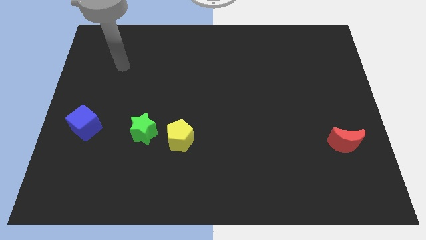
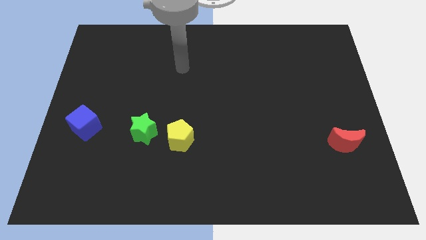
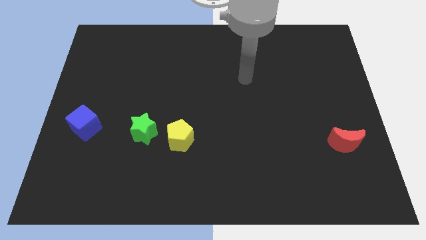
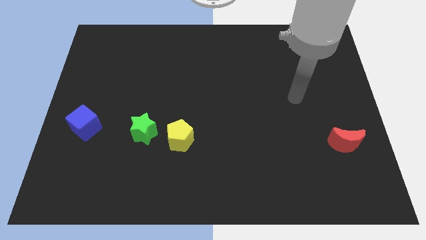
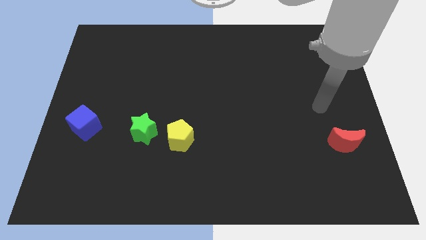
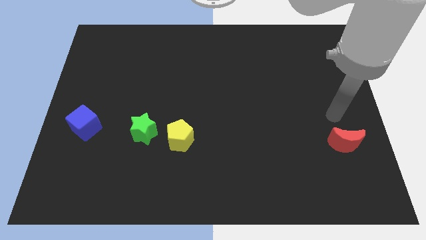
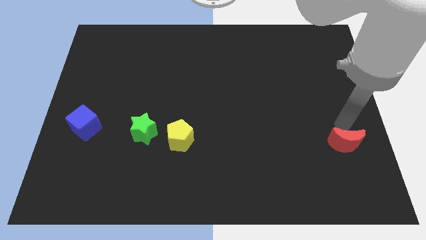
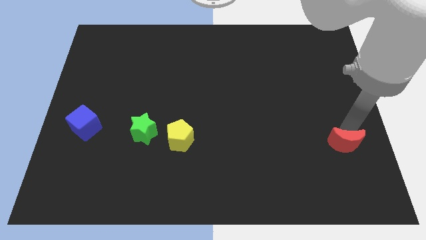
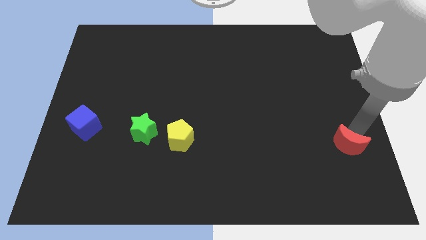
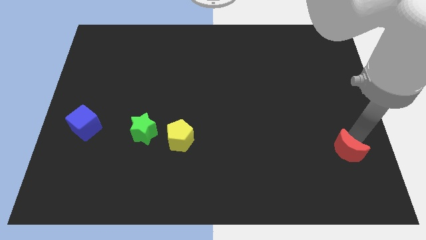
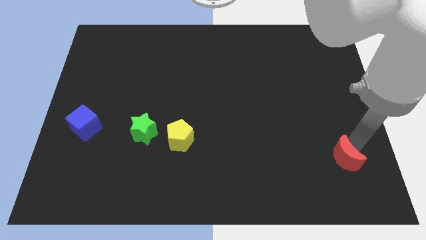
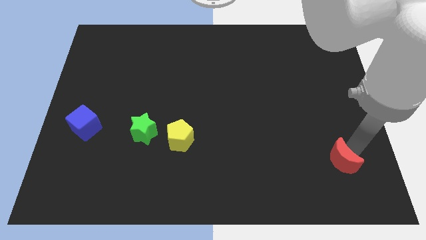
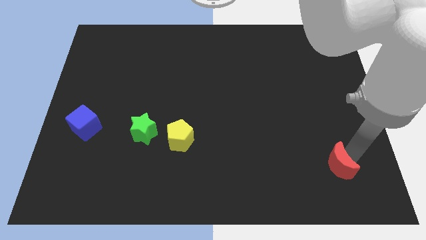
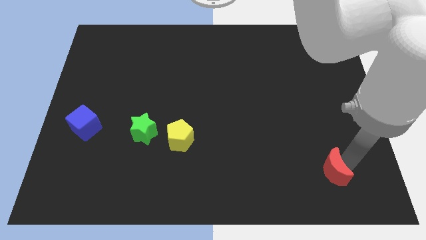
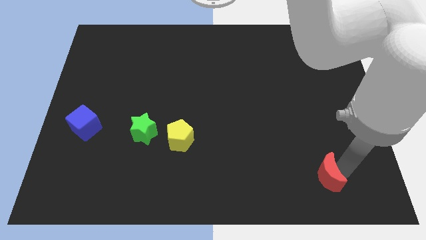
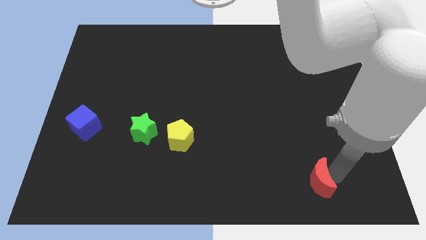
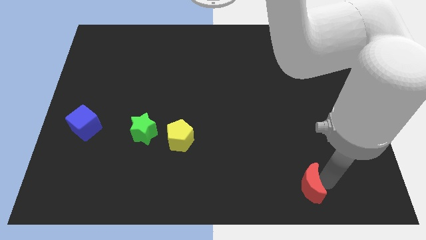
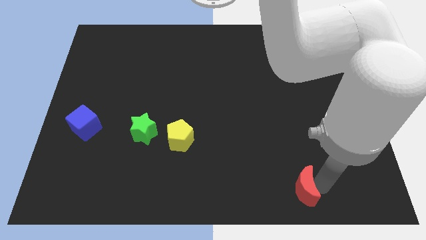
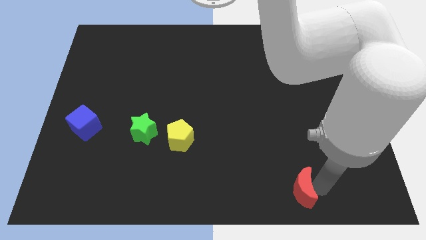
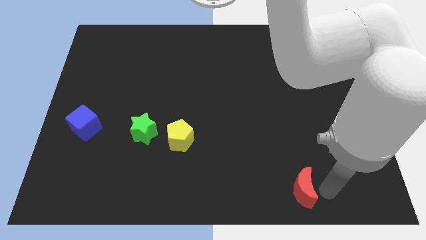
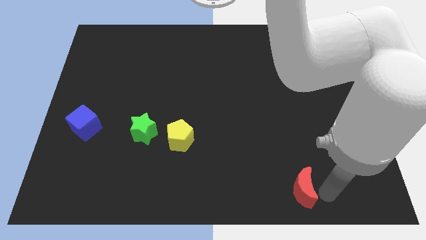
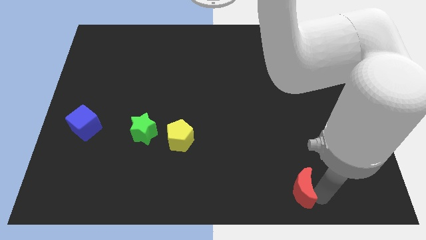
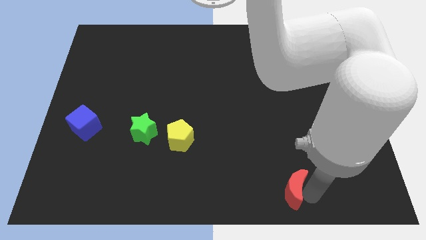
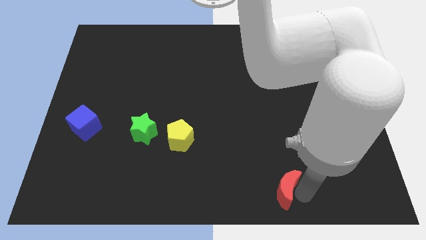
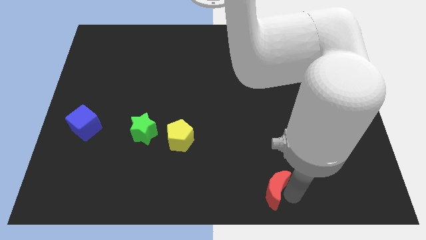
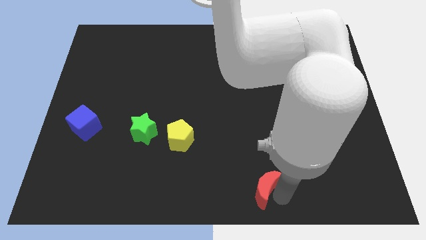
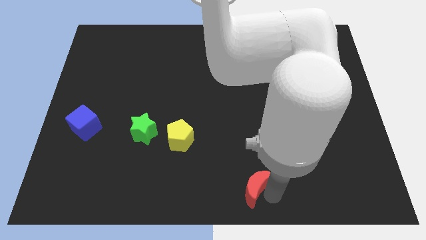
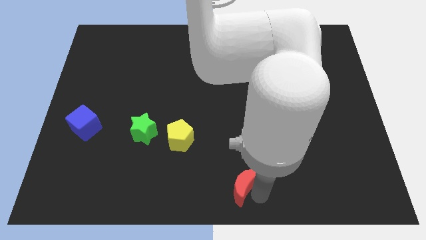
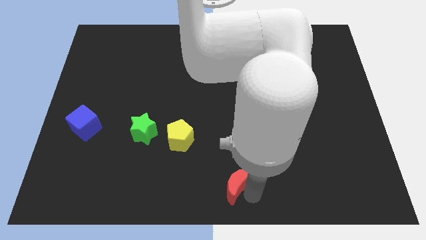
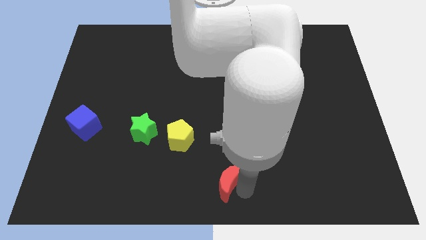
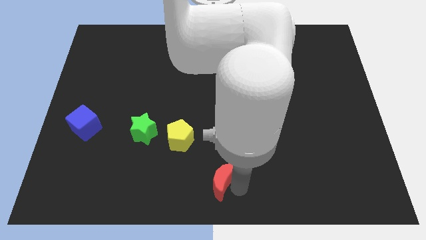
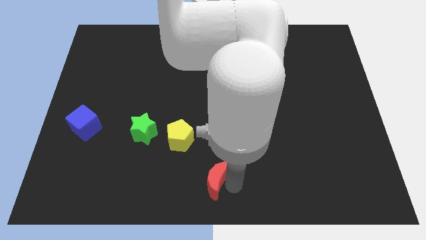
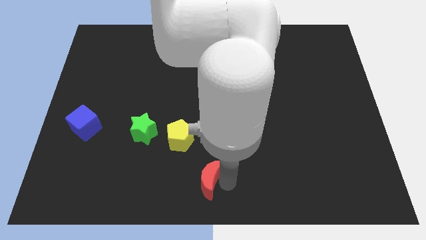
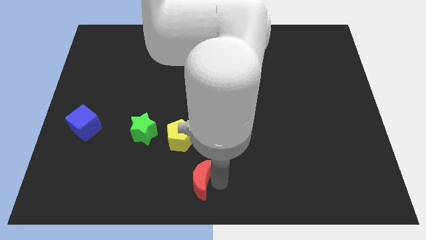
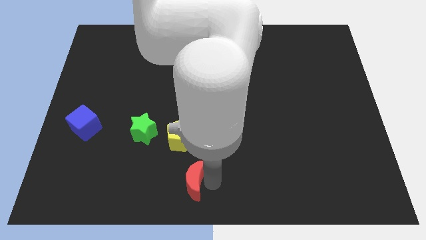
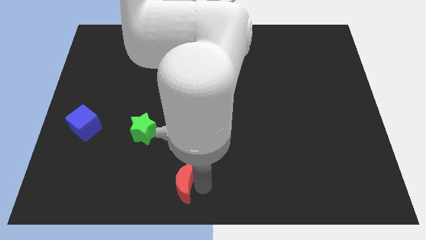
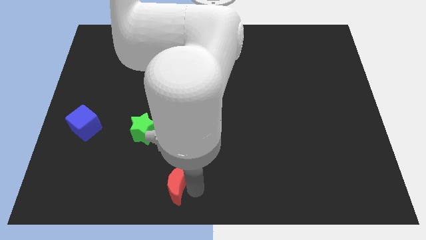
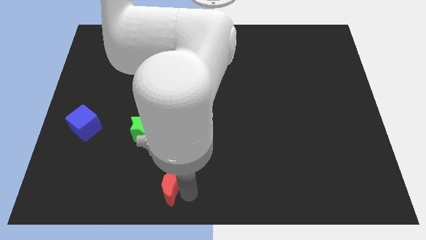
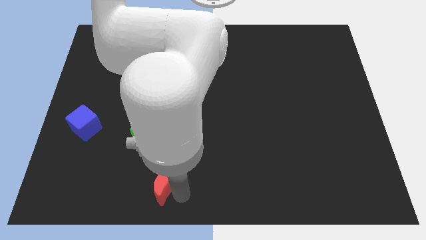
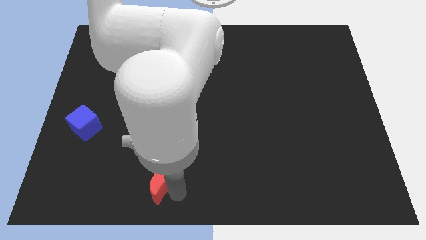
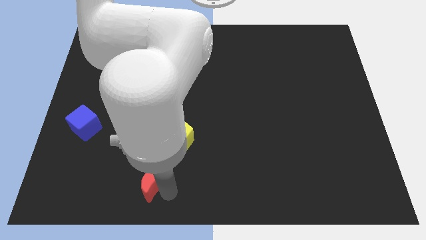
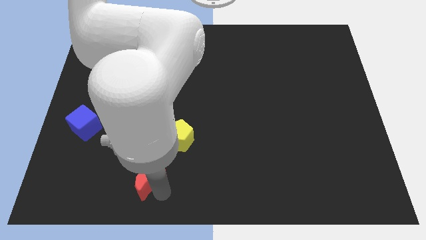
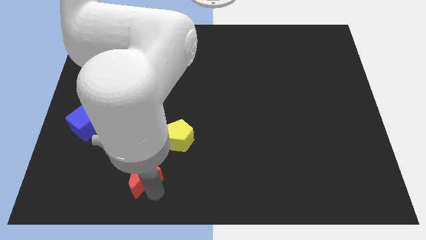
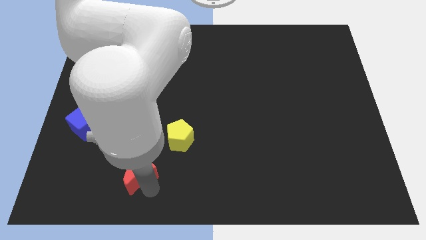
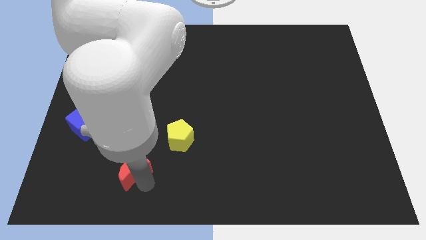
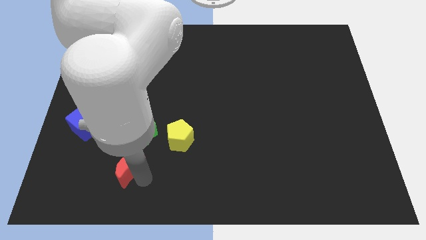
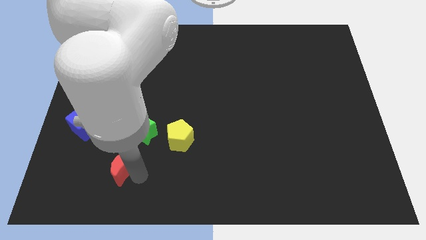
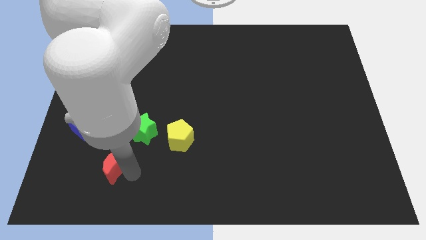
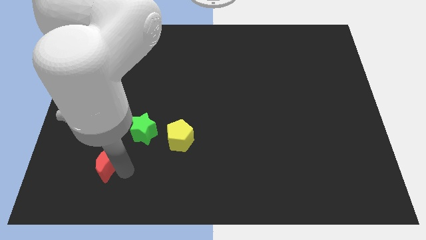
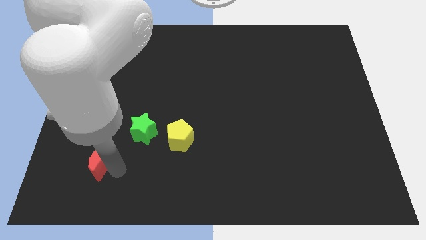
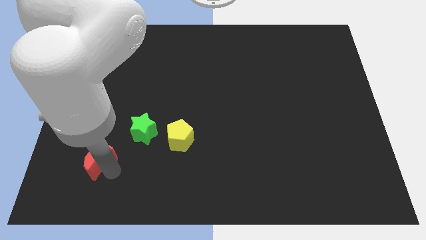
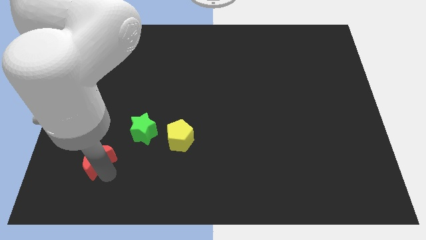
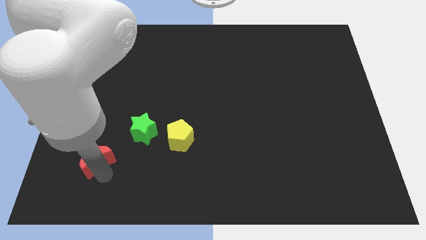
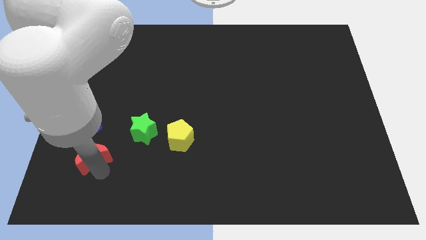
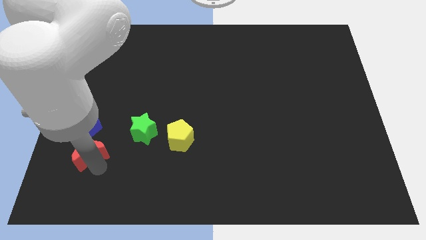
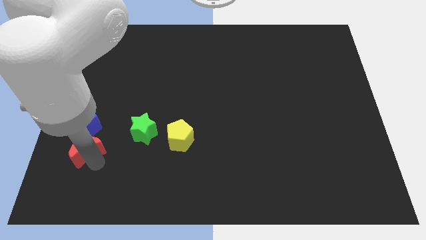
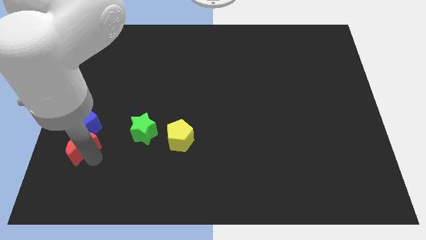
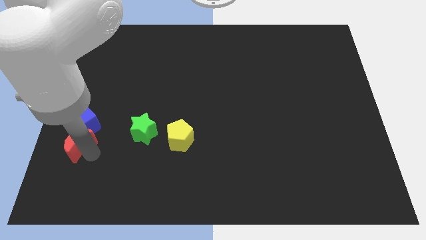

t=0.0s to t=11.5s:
move the moon next to the blue block

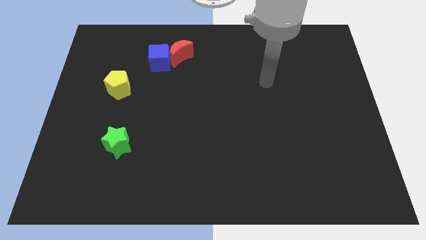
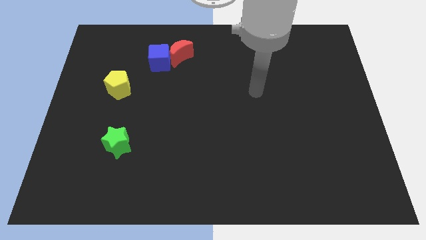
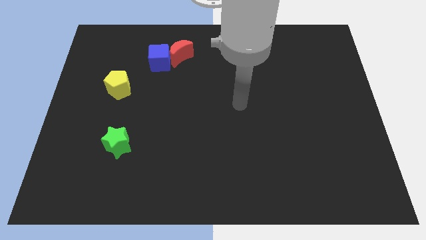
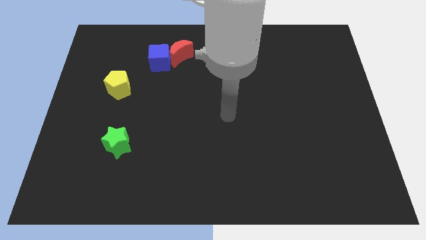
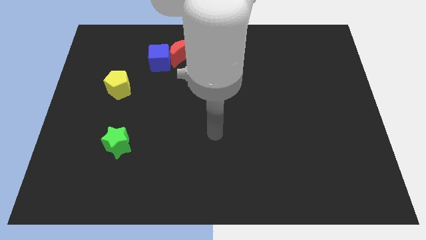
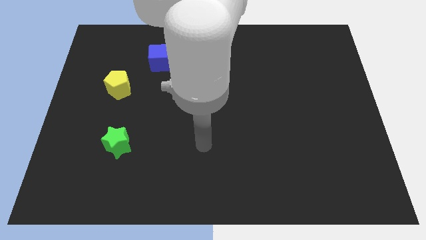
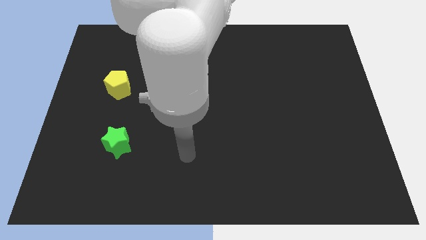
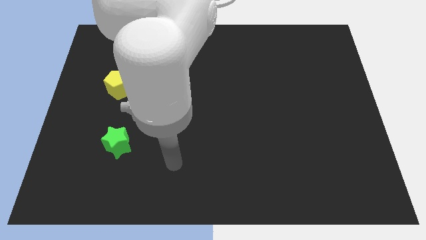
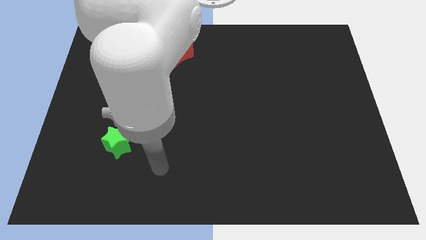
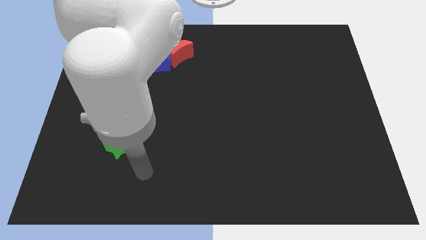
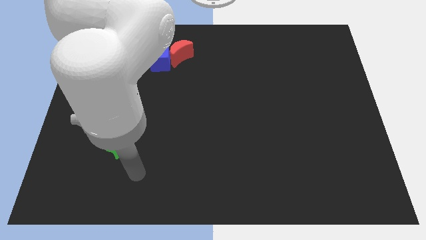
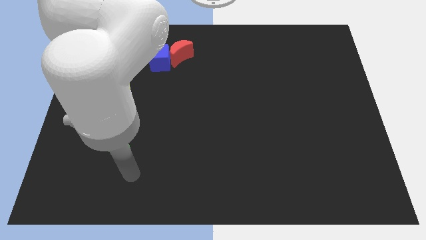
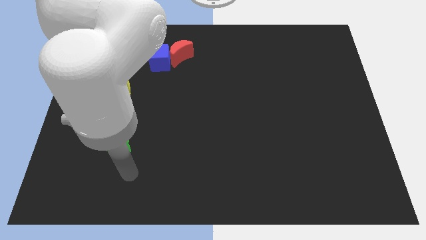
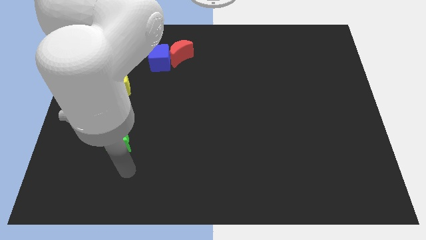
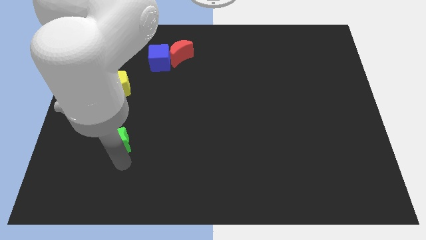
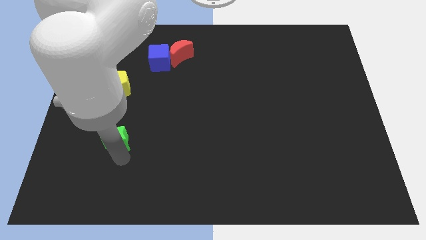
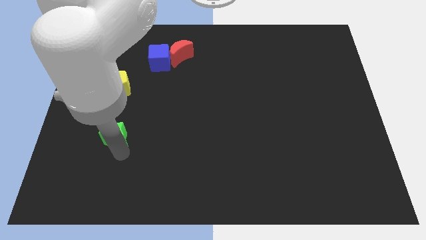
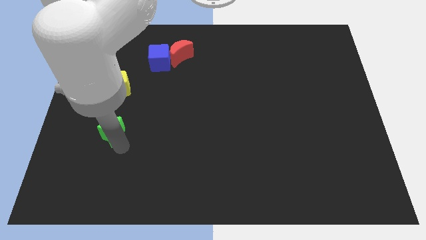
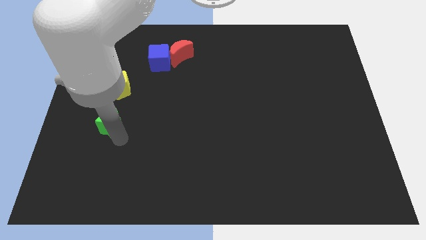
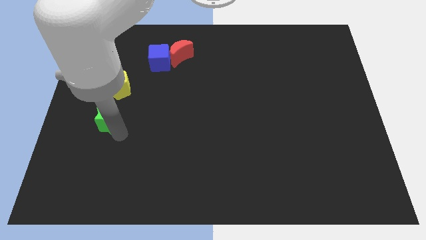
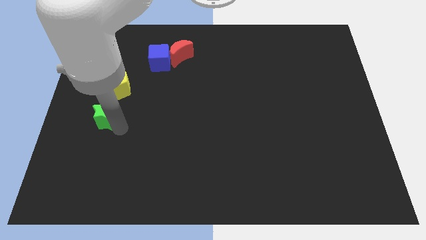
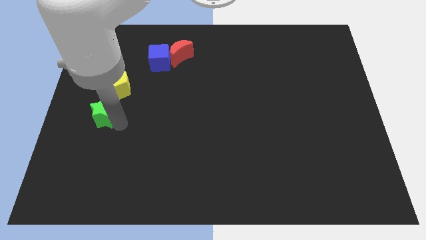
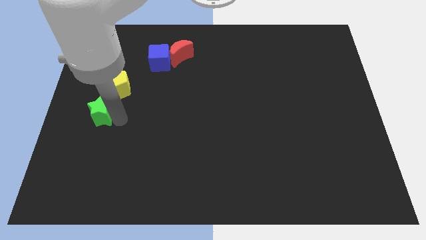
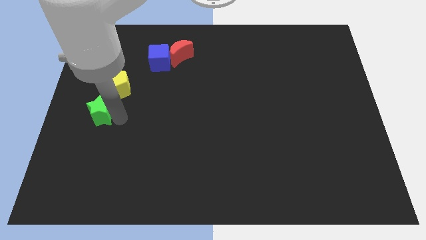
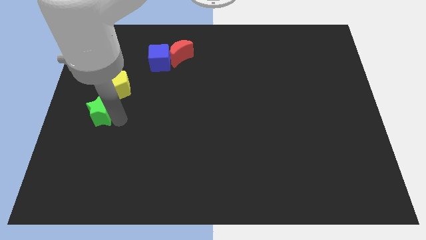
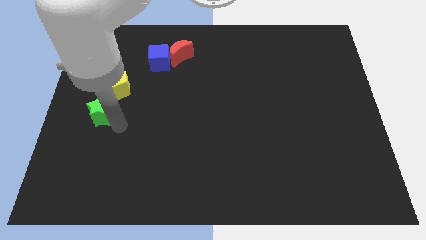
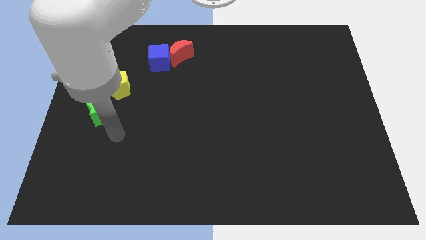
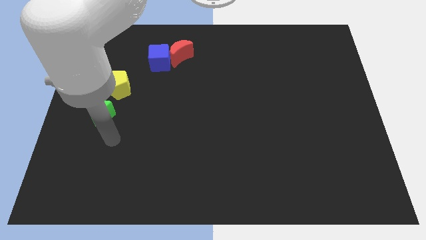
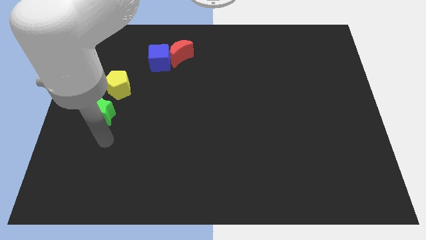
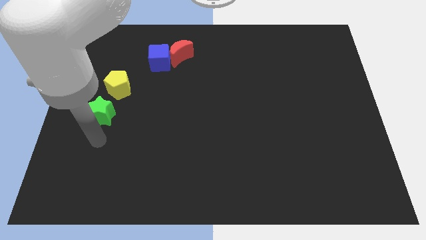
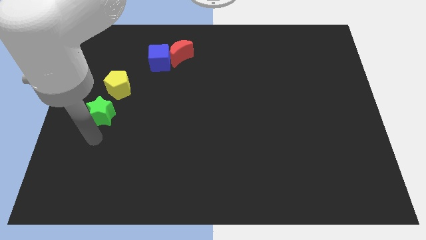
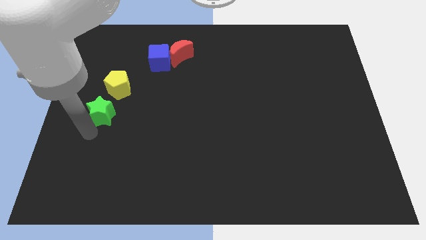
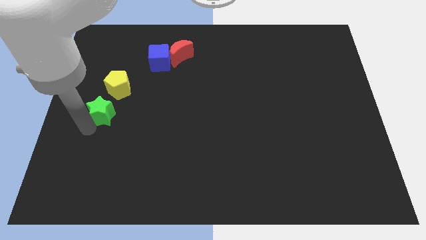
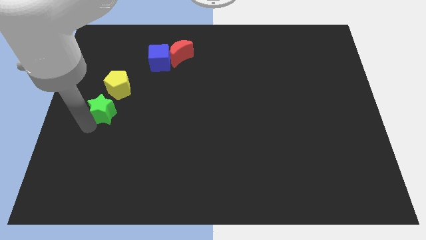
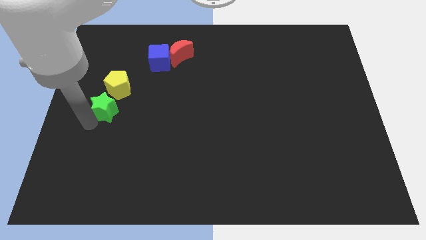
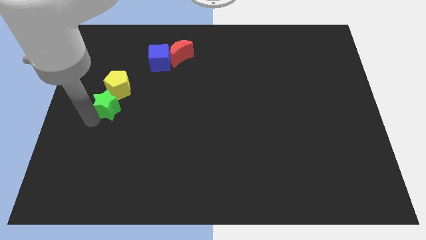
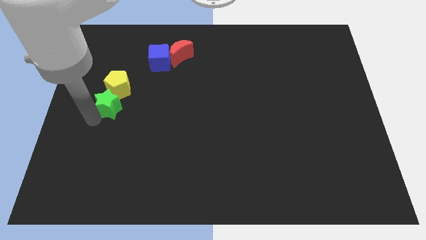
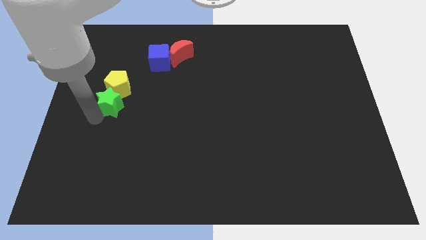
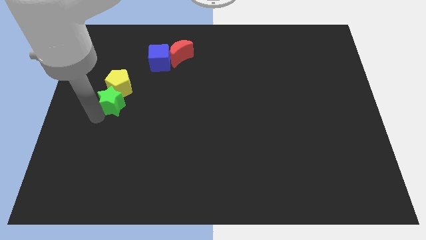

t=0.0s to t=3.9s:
move the green star to the yellow pentagon
